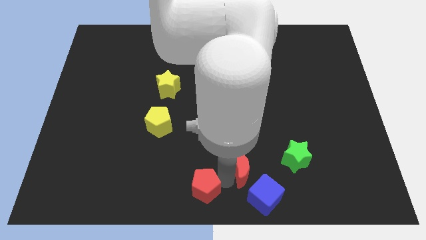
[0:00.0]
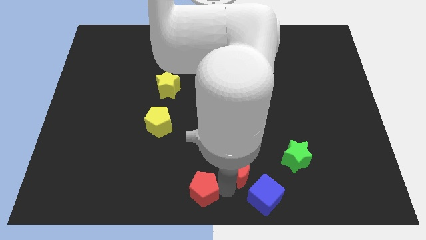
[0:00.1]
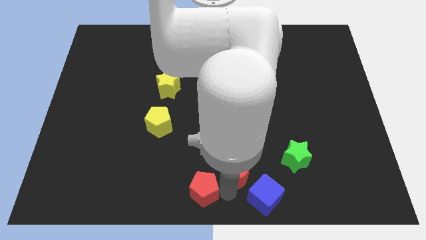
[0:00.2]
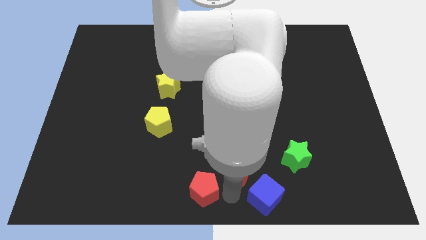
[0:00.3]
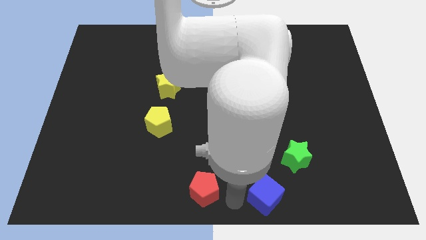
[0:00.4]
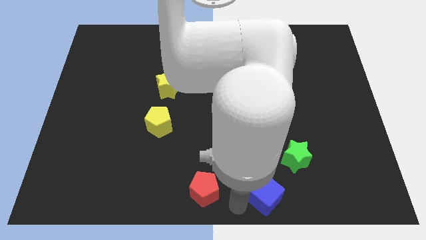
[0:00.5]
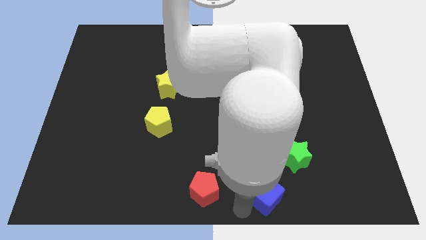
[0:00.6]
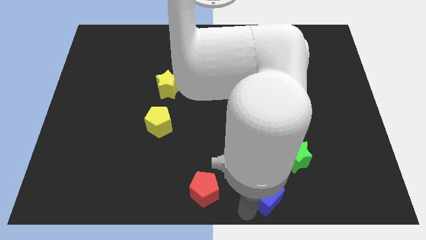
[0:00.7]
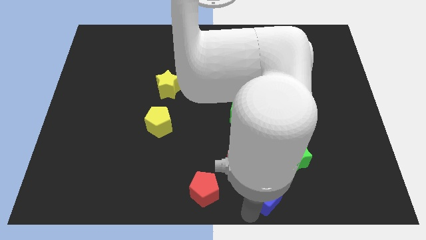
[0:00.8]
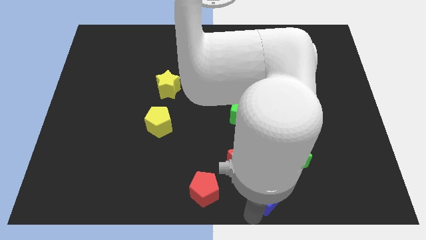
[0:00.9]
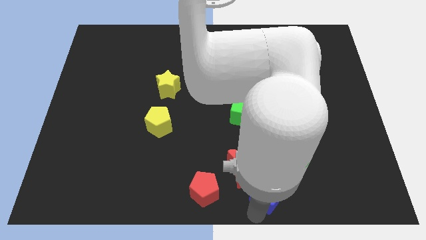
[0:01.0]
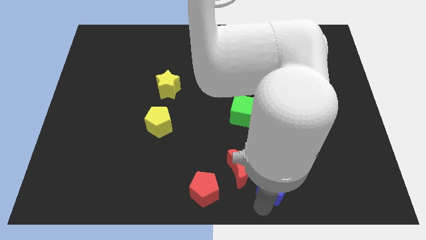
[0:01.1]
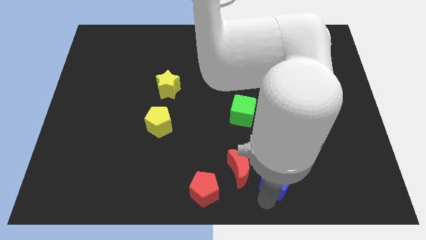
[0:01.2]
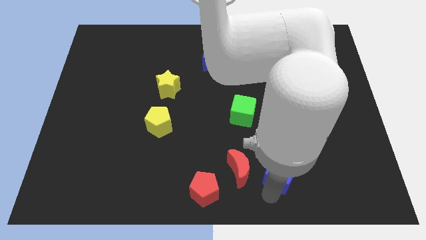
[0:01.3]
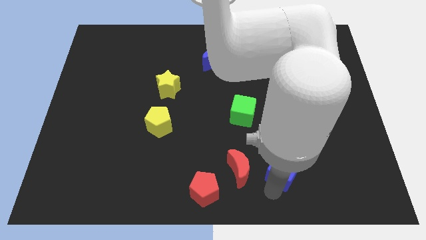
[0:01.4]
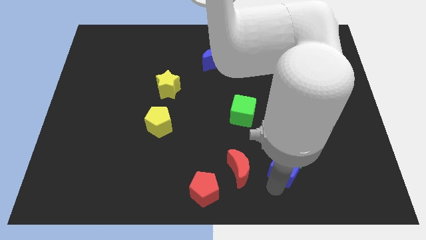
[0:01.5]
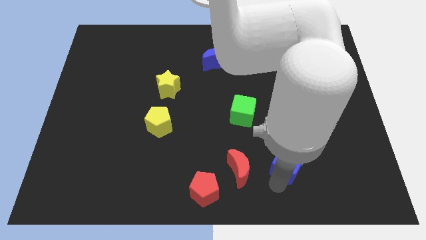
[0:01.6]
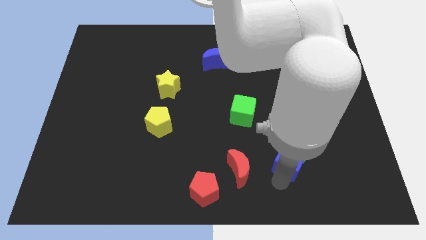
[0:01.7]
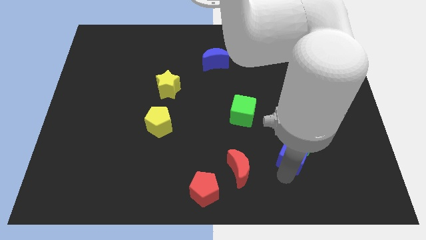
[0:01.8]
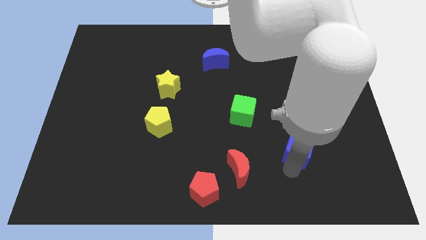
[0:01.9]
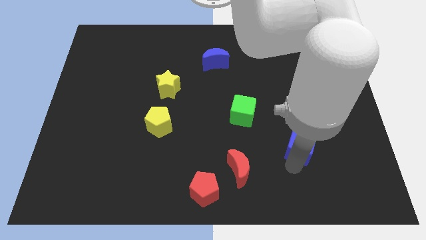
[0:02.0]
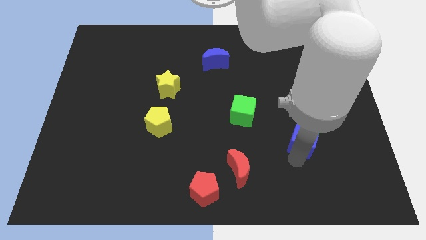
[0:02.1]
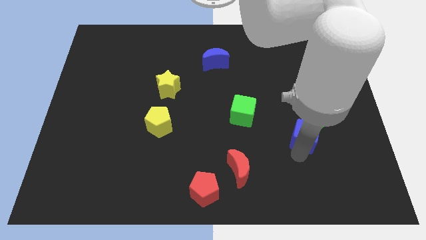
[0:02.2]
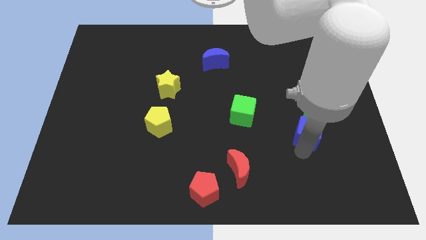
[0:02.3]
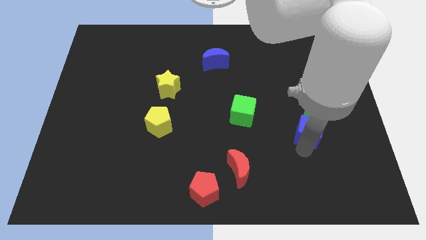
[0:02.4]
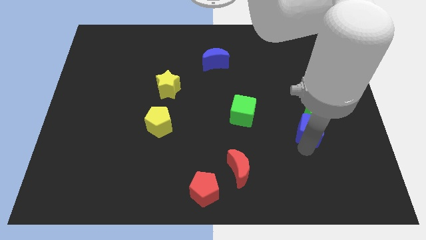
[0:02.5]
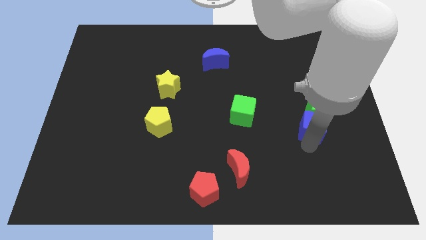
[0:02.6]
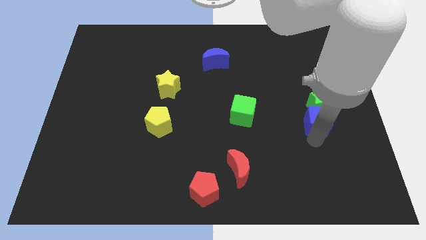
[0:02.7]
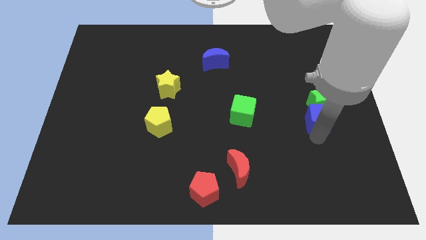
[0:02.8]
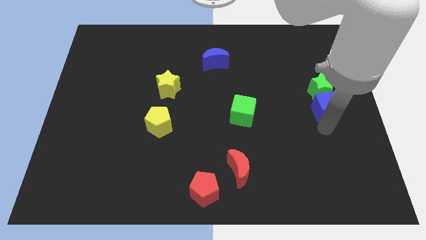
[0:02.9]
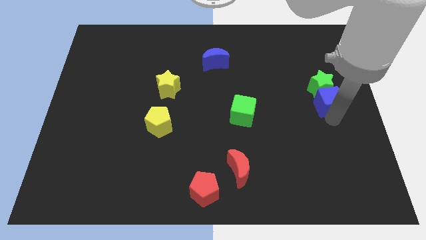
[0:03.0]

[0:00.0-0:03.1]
place blue cube to the right of green cube

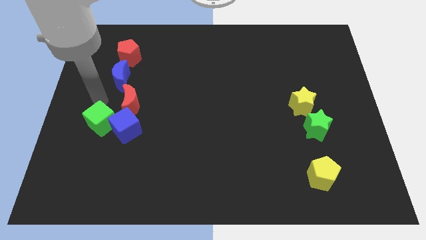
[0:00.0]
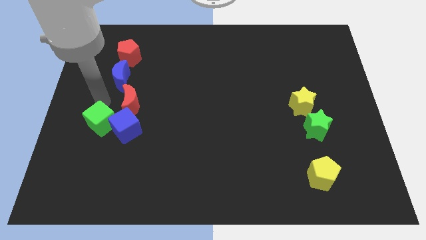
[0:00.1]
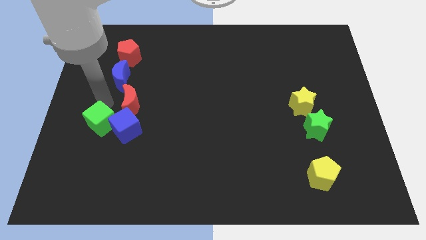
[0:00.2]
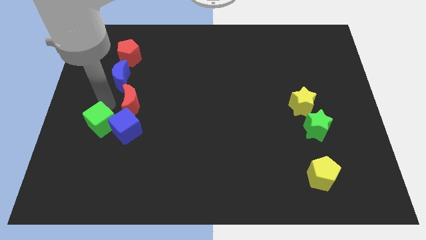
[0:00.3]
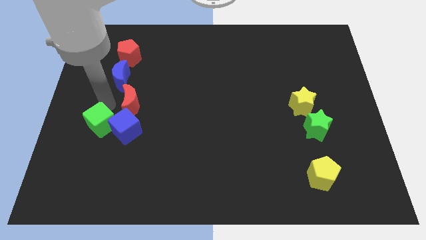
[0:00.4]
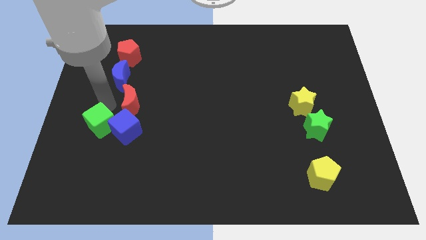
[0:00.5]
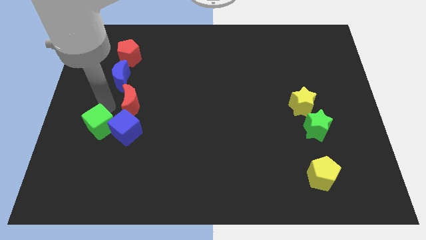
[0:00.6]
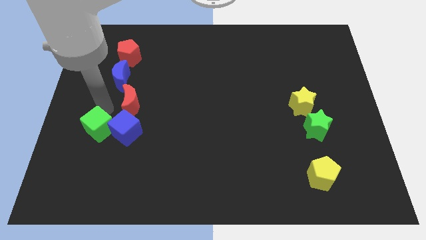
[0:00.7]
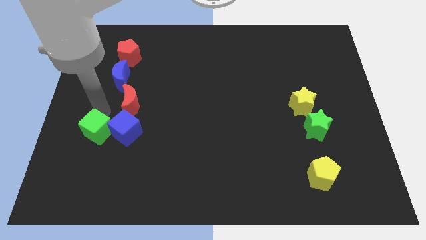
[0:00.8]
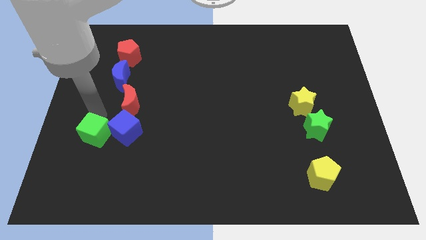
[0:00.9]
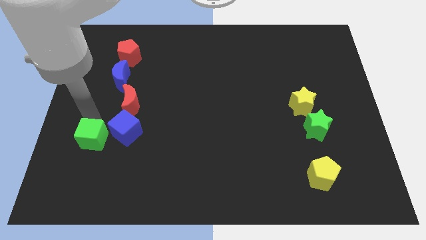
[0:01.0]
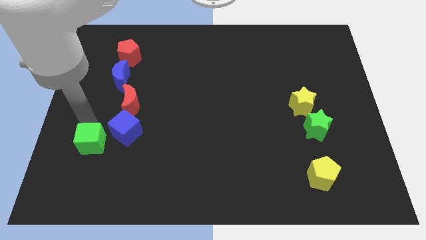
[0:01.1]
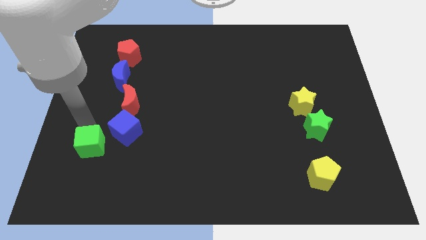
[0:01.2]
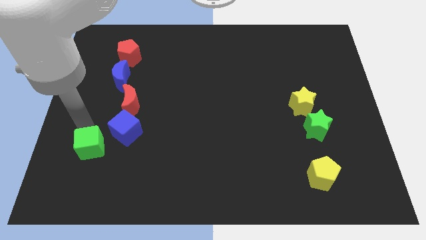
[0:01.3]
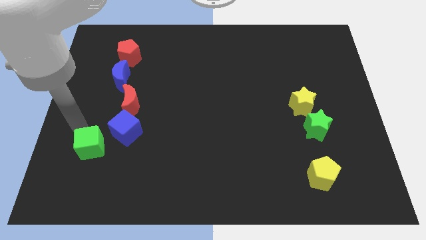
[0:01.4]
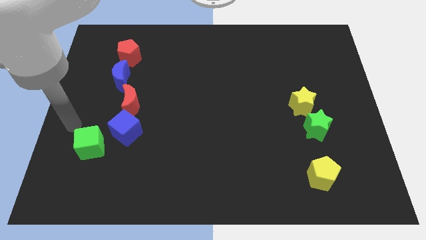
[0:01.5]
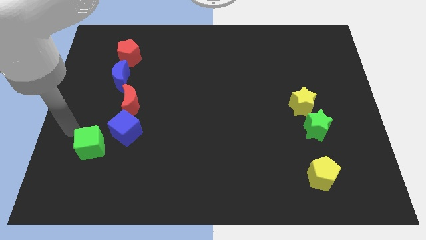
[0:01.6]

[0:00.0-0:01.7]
separate green cube and blue cube

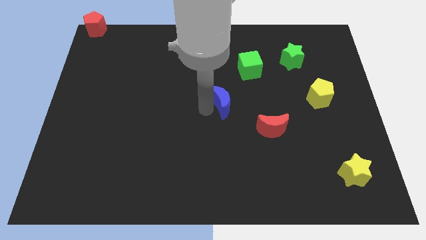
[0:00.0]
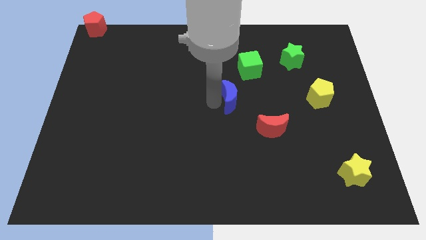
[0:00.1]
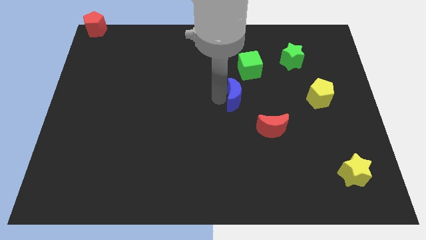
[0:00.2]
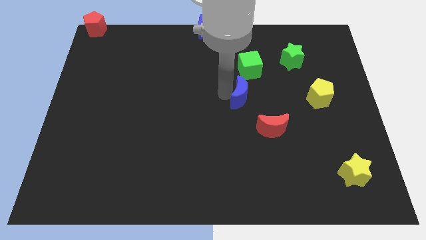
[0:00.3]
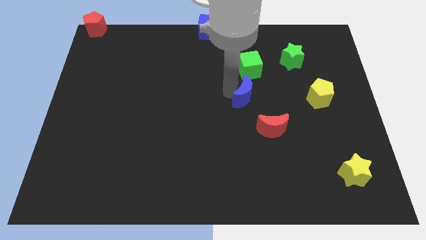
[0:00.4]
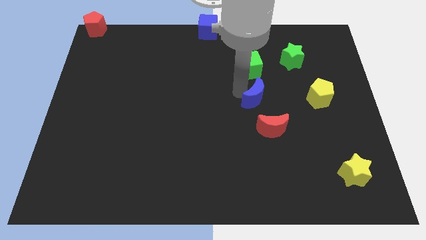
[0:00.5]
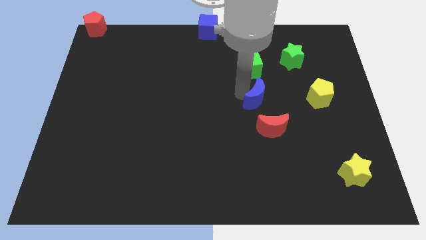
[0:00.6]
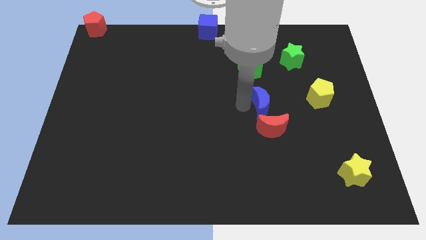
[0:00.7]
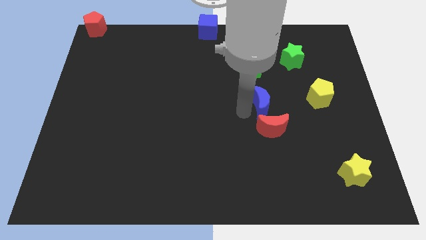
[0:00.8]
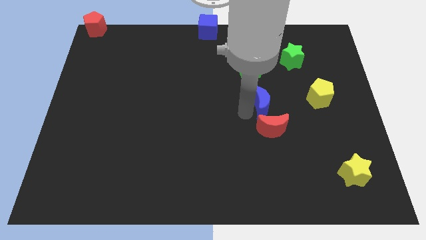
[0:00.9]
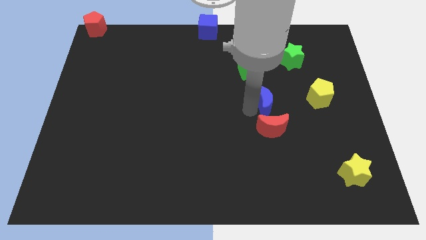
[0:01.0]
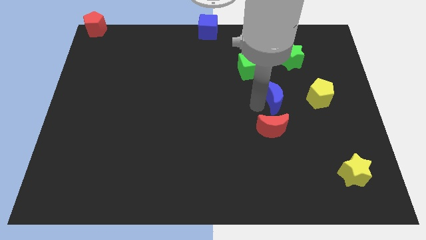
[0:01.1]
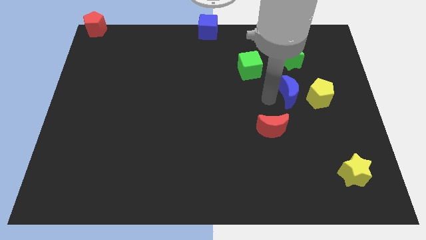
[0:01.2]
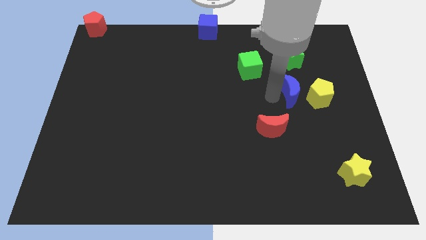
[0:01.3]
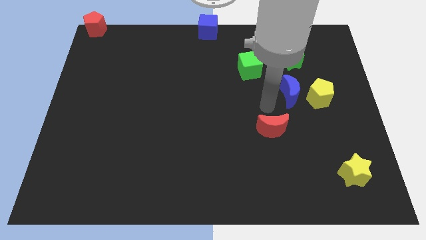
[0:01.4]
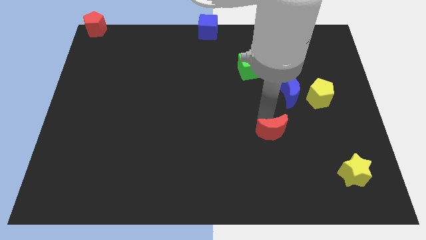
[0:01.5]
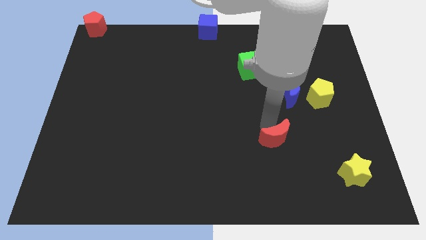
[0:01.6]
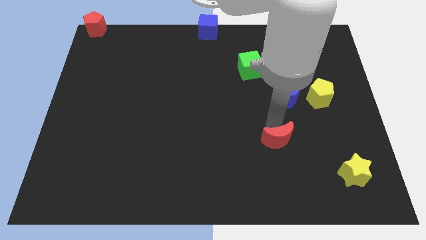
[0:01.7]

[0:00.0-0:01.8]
move the blue crescent to the left of the yellow pentagon

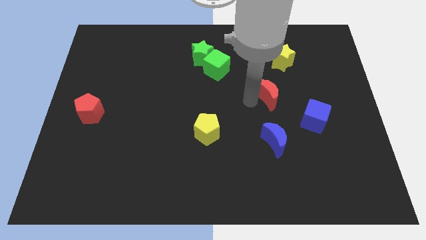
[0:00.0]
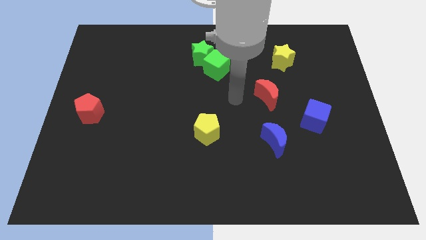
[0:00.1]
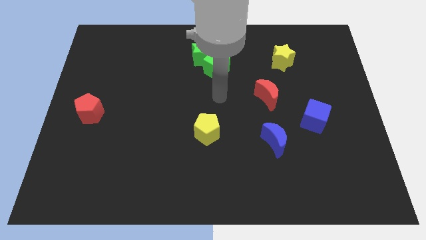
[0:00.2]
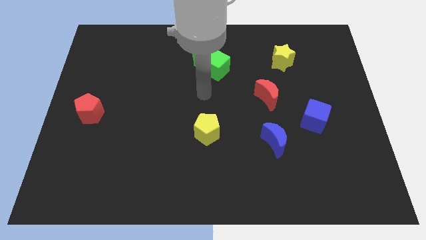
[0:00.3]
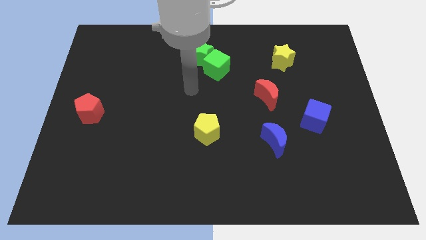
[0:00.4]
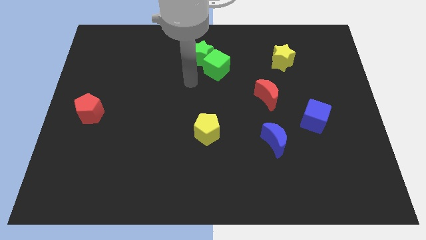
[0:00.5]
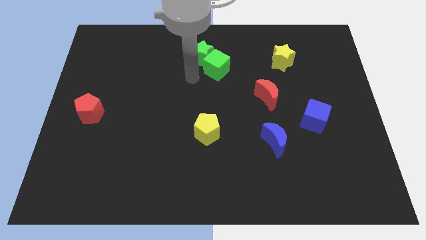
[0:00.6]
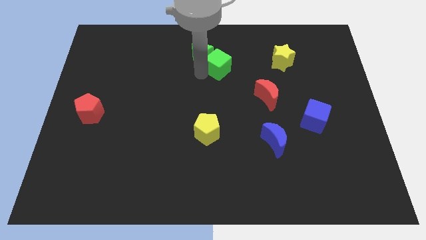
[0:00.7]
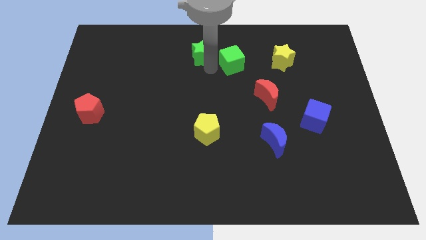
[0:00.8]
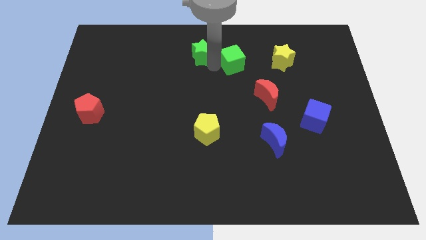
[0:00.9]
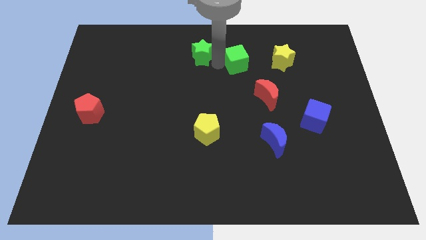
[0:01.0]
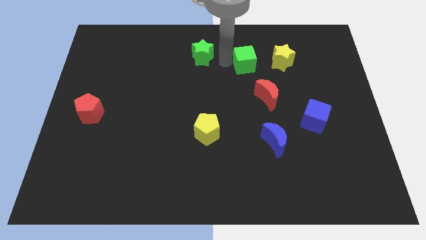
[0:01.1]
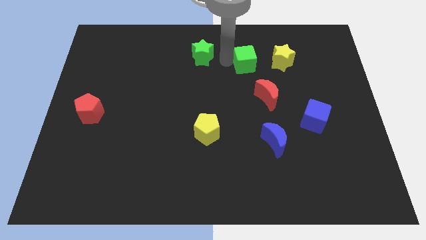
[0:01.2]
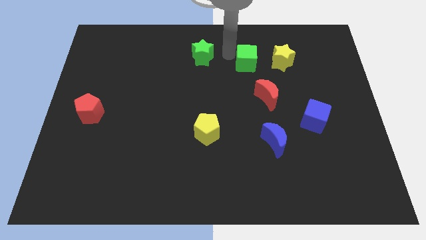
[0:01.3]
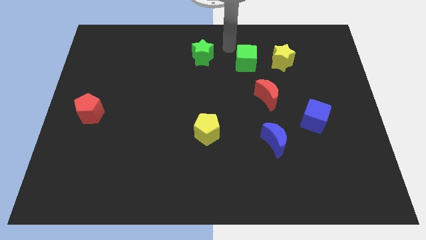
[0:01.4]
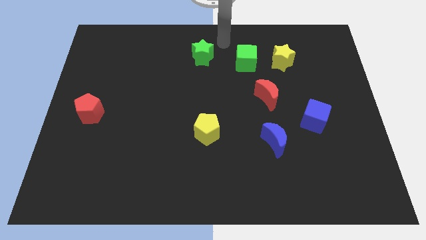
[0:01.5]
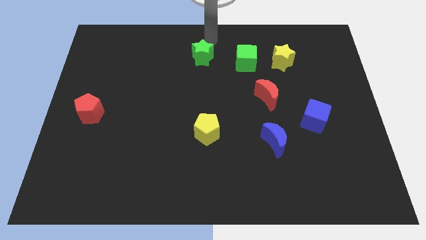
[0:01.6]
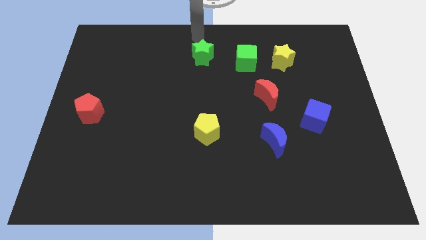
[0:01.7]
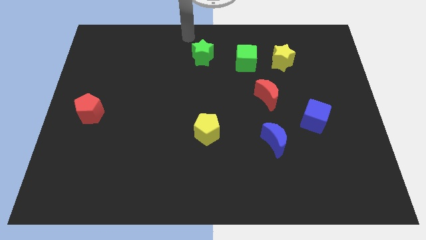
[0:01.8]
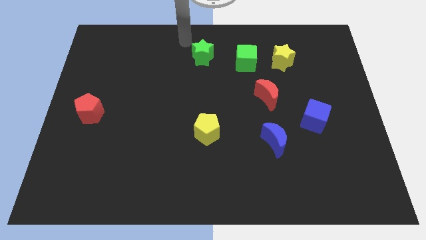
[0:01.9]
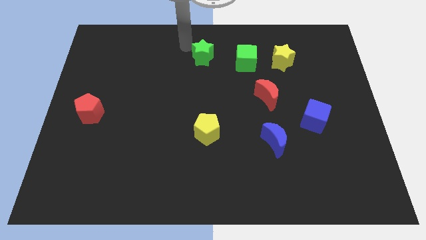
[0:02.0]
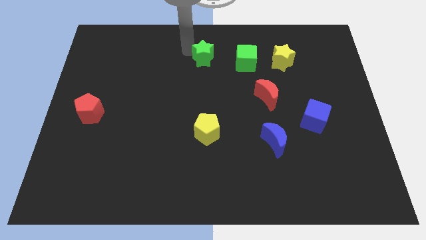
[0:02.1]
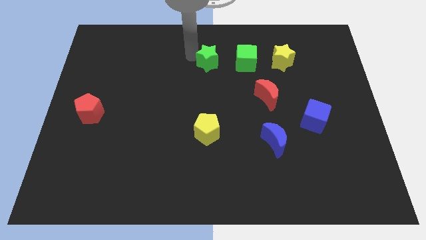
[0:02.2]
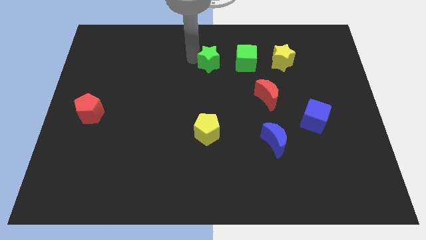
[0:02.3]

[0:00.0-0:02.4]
place the green blocks horizontally to yellow star
